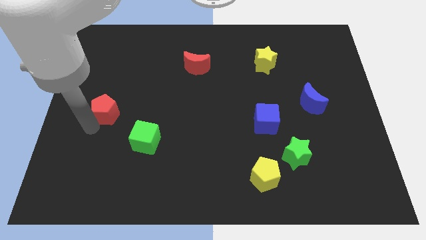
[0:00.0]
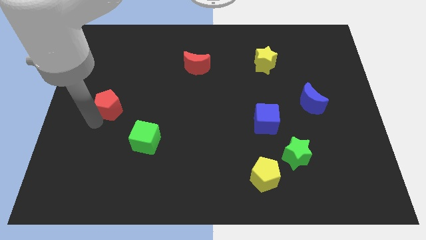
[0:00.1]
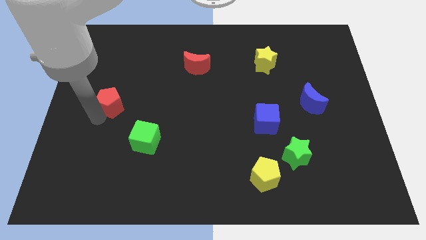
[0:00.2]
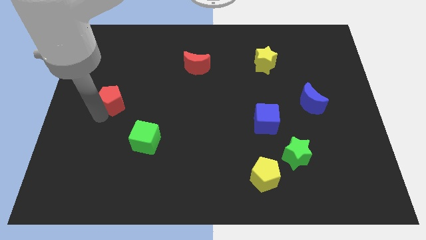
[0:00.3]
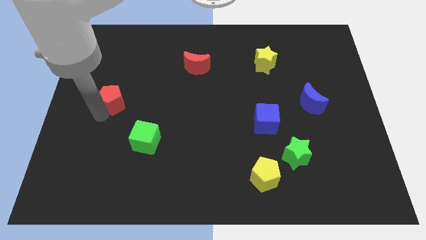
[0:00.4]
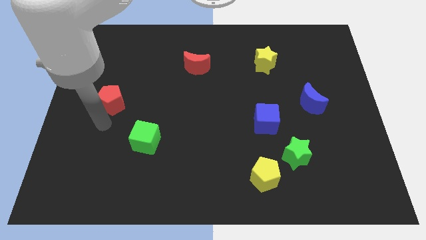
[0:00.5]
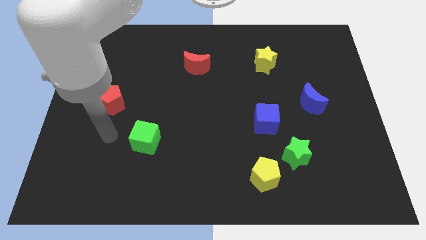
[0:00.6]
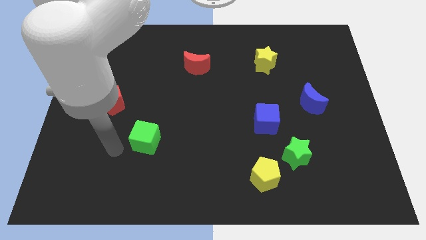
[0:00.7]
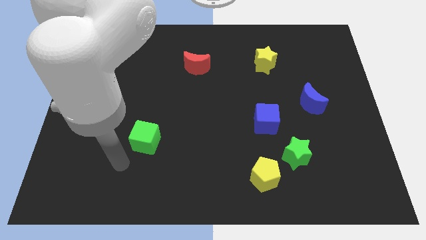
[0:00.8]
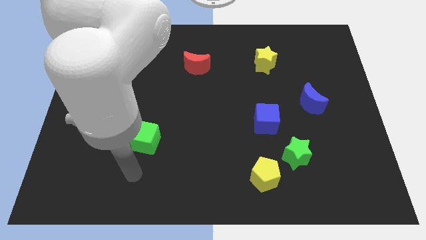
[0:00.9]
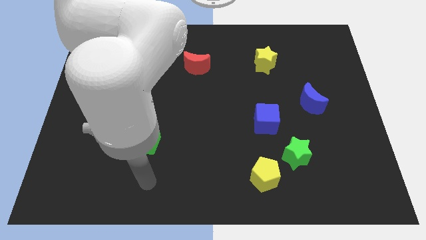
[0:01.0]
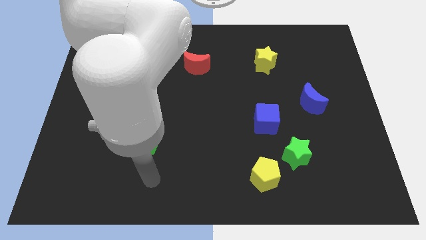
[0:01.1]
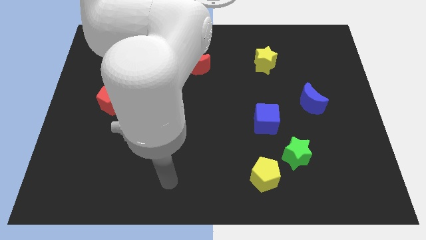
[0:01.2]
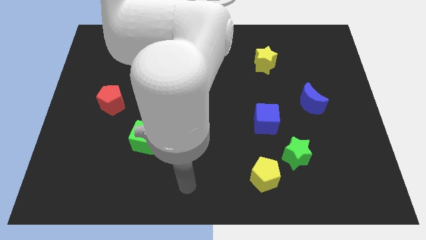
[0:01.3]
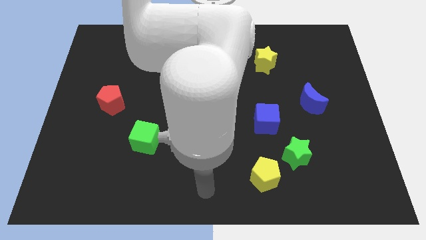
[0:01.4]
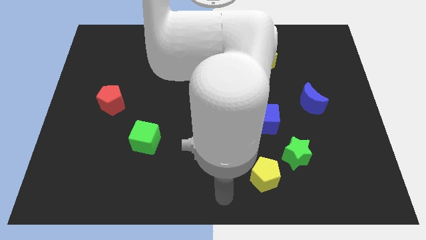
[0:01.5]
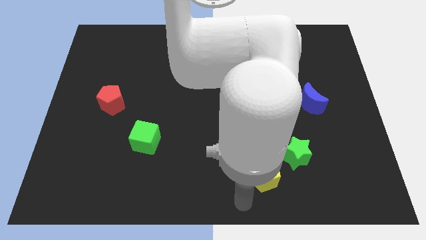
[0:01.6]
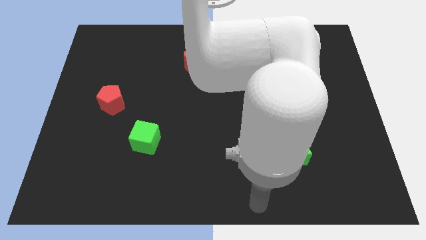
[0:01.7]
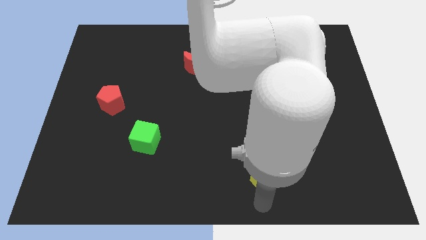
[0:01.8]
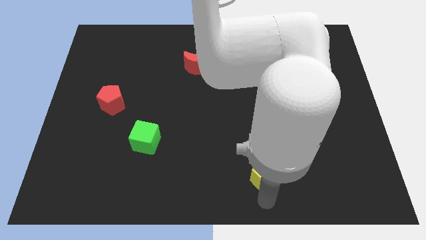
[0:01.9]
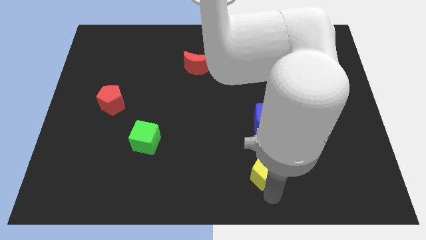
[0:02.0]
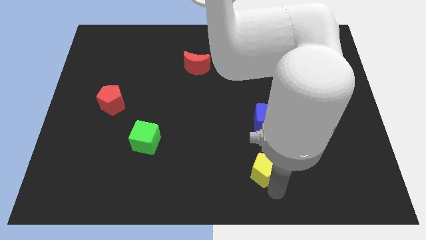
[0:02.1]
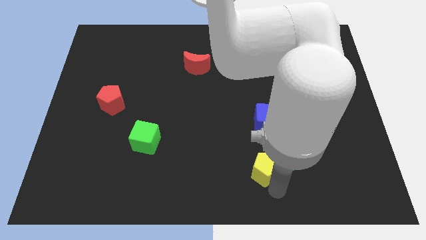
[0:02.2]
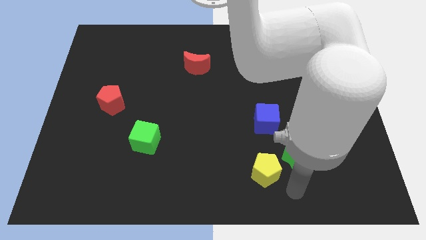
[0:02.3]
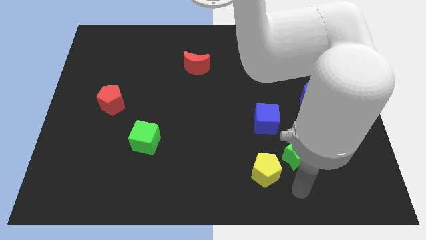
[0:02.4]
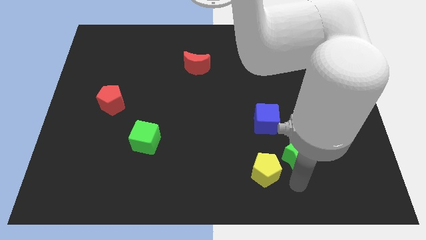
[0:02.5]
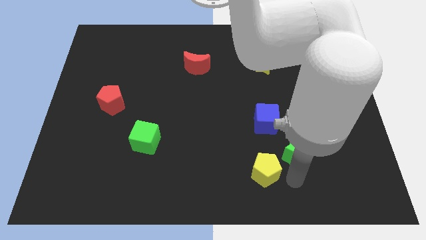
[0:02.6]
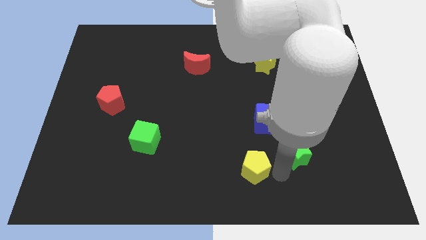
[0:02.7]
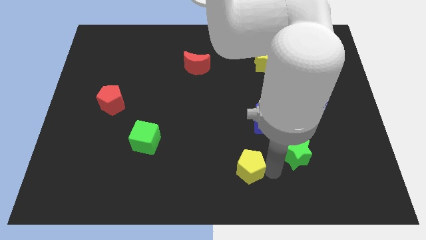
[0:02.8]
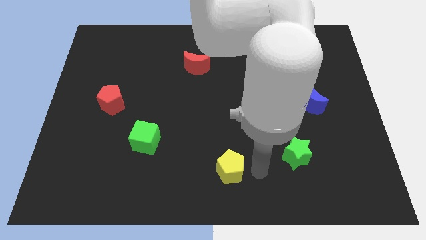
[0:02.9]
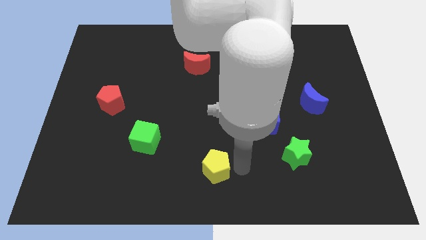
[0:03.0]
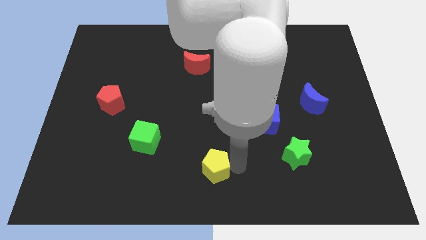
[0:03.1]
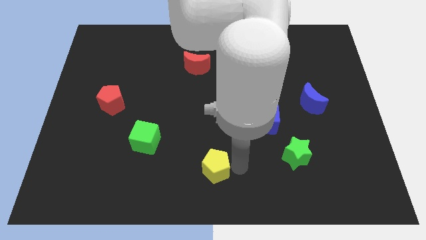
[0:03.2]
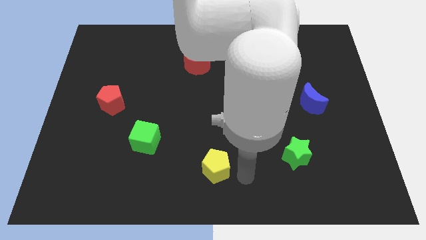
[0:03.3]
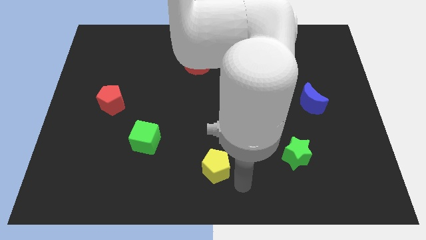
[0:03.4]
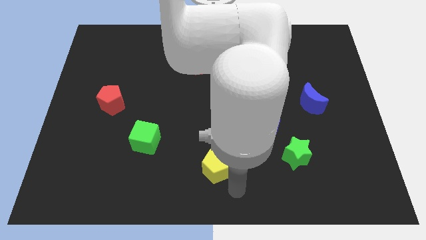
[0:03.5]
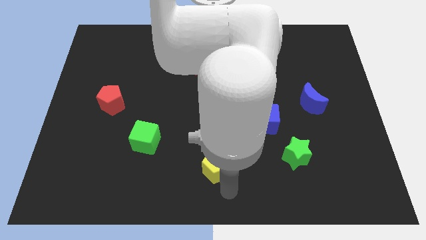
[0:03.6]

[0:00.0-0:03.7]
slightly move red pentagon and yellow pentagon towards top

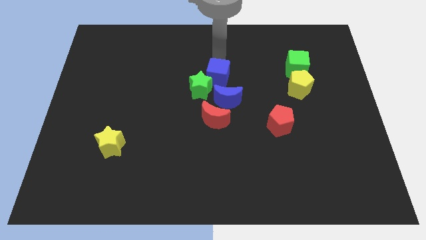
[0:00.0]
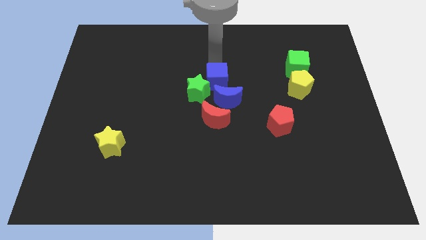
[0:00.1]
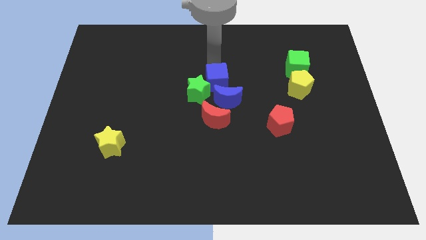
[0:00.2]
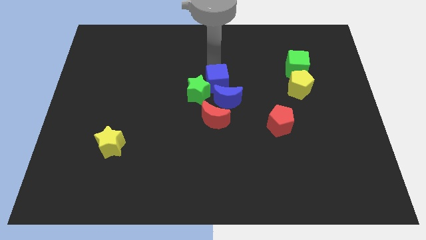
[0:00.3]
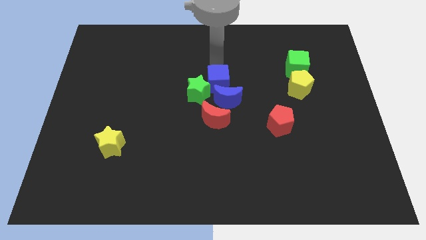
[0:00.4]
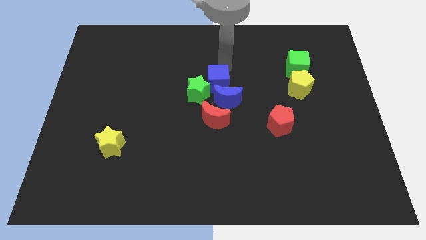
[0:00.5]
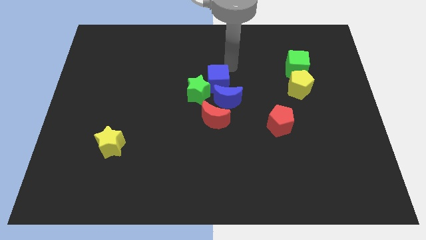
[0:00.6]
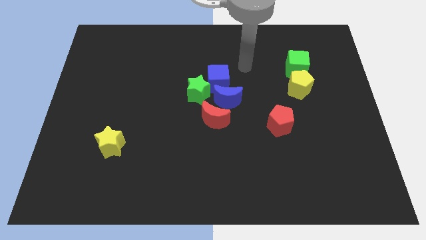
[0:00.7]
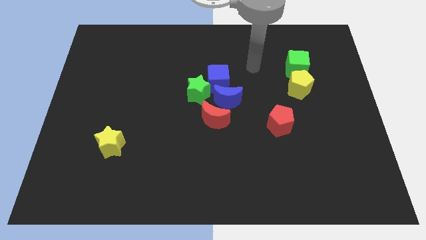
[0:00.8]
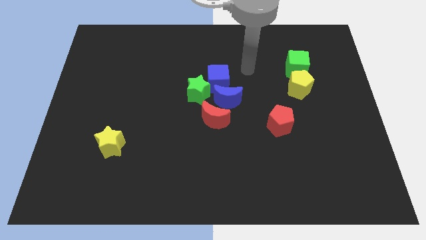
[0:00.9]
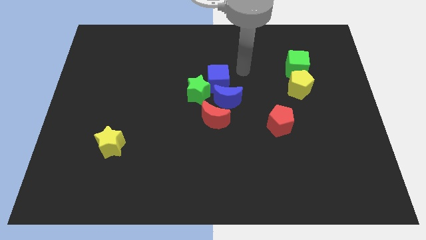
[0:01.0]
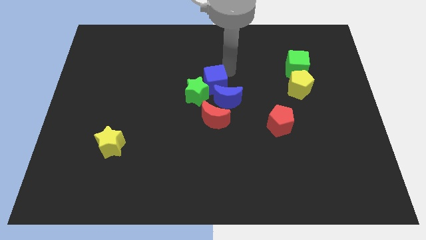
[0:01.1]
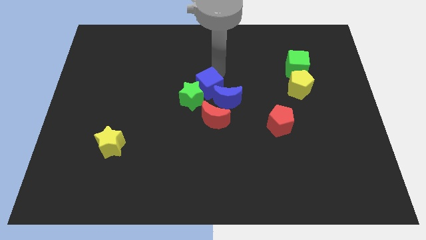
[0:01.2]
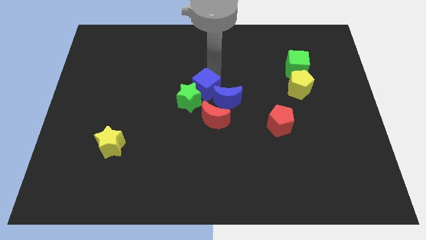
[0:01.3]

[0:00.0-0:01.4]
push blue cube slightly downwards

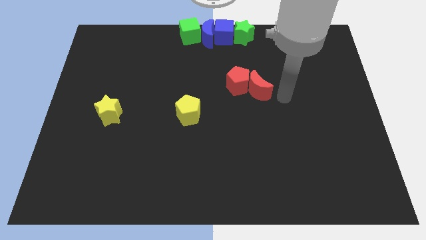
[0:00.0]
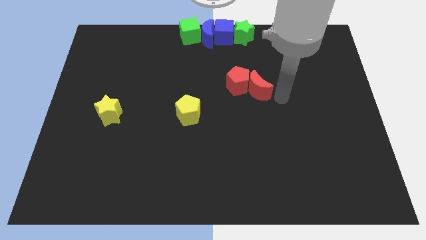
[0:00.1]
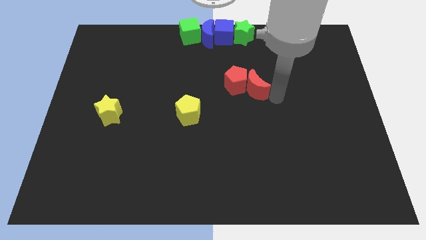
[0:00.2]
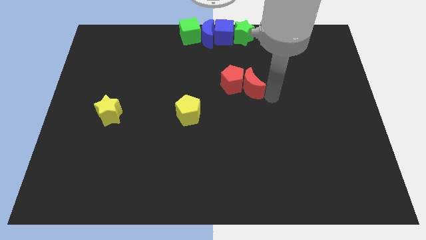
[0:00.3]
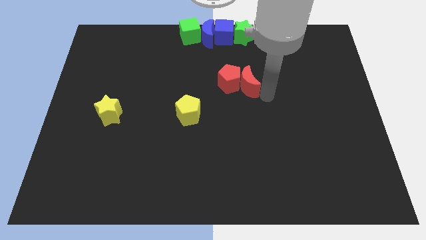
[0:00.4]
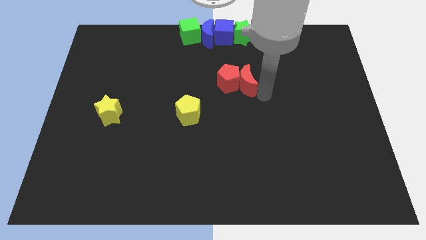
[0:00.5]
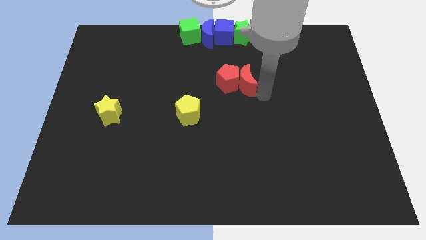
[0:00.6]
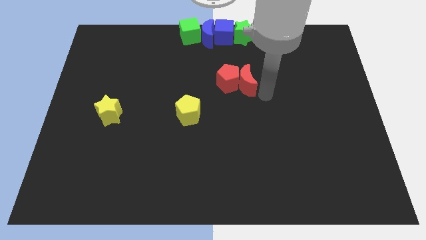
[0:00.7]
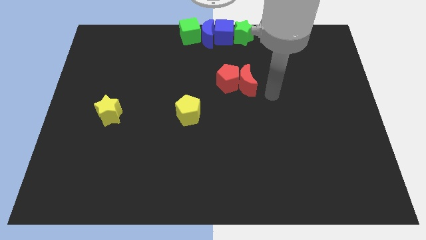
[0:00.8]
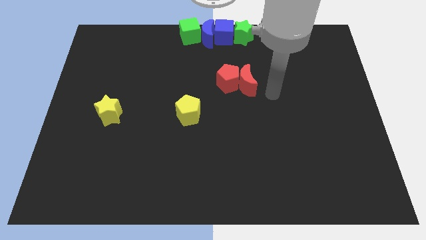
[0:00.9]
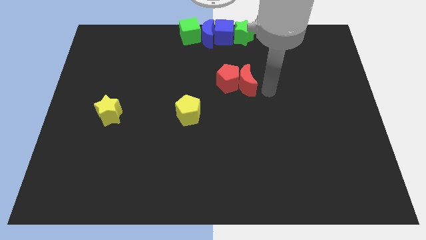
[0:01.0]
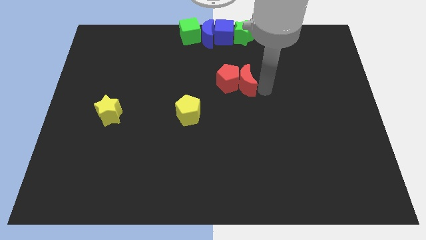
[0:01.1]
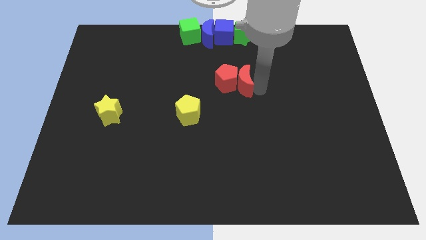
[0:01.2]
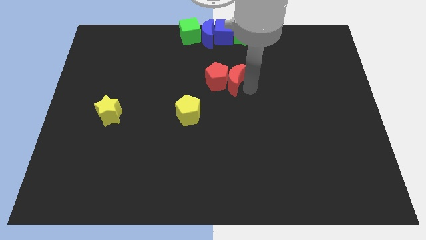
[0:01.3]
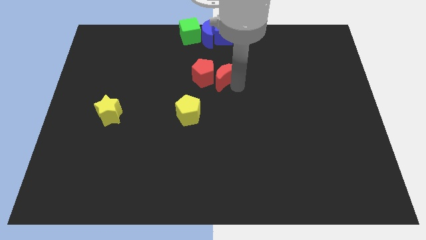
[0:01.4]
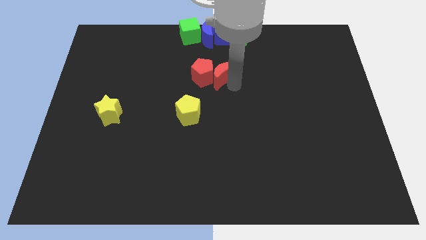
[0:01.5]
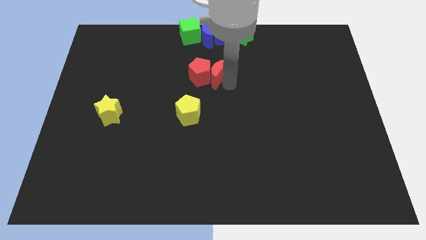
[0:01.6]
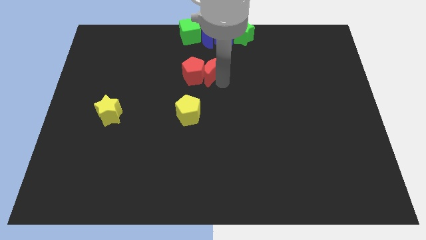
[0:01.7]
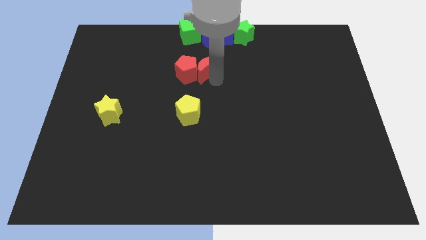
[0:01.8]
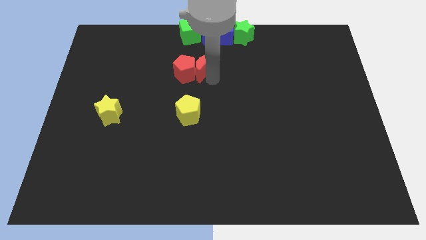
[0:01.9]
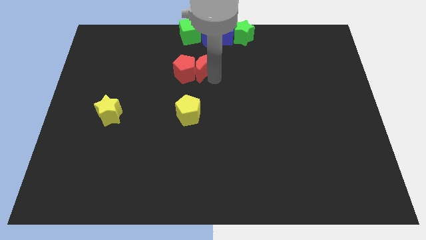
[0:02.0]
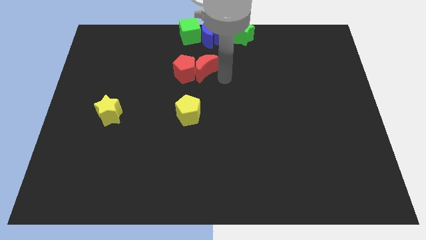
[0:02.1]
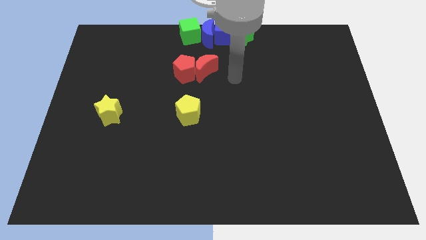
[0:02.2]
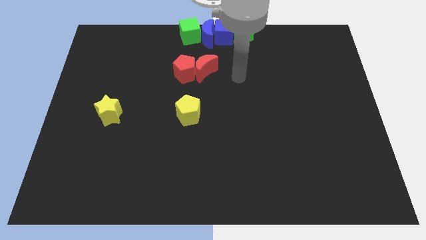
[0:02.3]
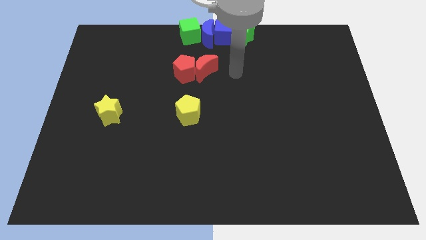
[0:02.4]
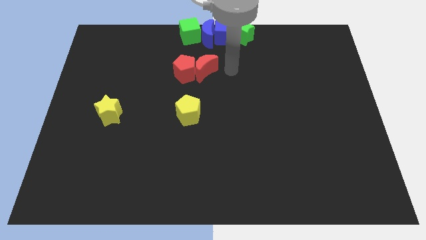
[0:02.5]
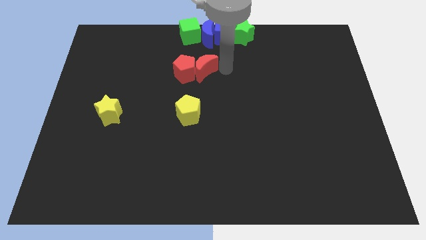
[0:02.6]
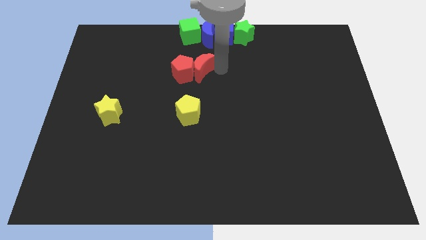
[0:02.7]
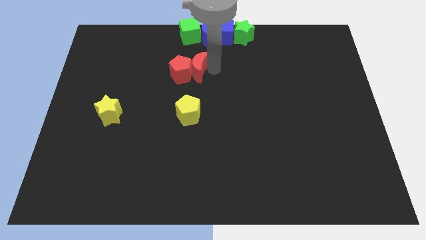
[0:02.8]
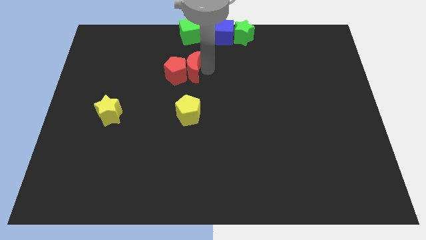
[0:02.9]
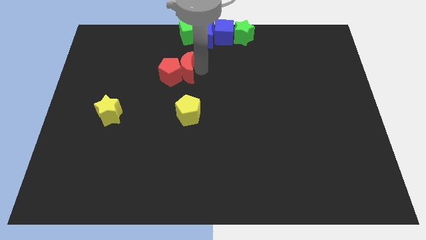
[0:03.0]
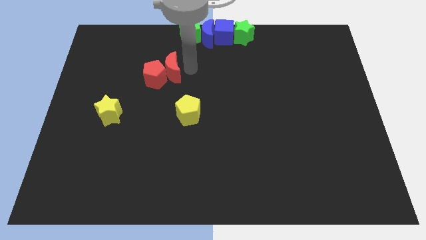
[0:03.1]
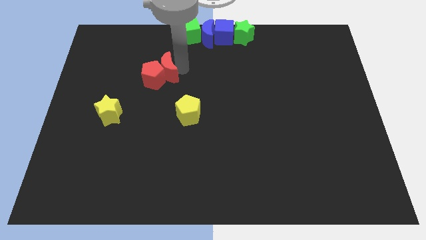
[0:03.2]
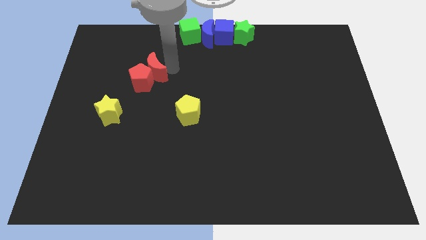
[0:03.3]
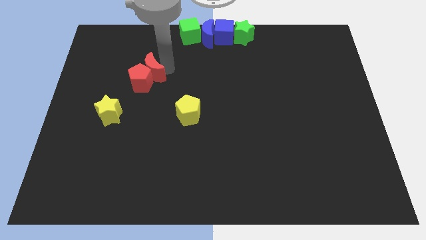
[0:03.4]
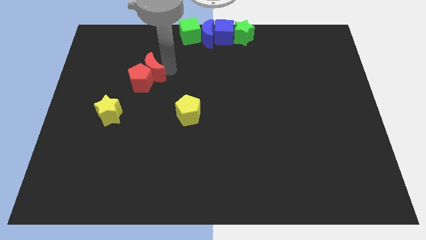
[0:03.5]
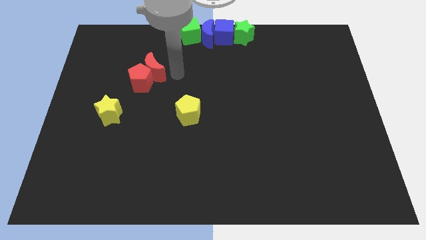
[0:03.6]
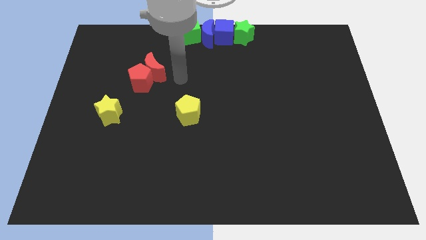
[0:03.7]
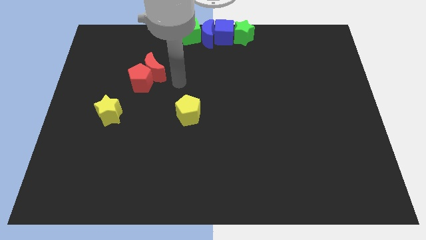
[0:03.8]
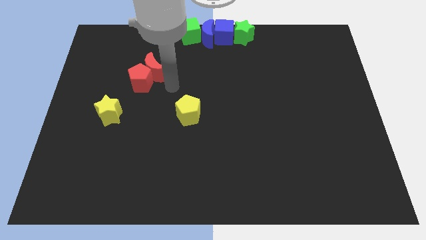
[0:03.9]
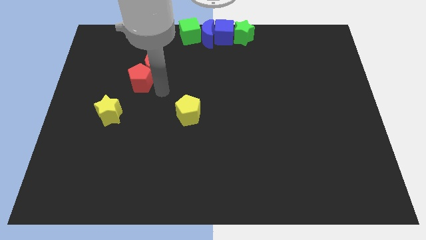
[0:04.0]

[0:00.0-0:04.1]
move the red blocks to the left of the board
